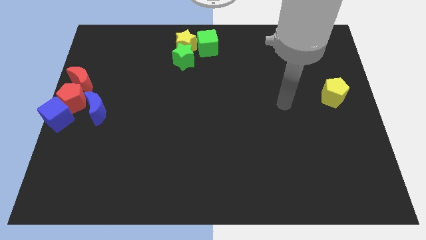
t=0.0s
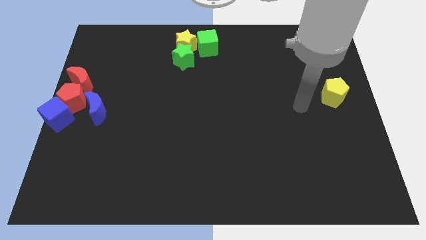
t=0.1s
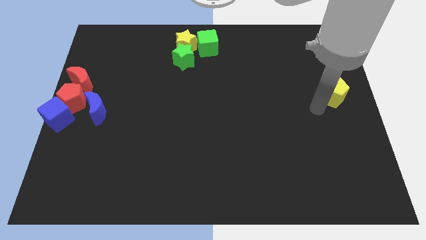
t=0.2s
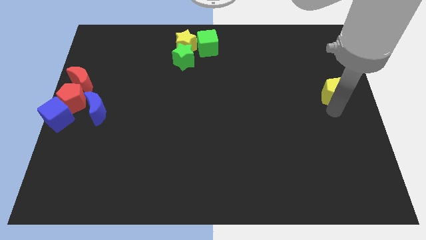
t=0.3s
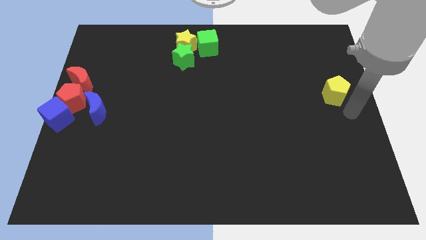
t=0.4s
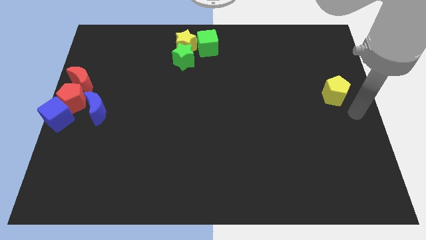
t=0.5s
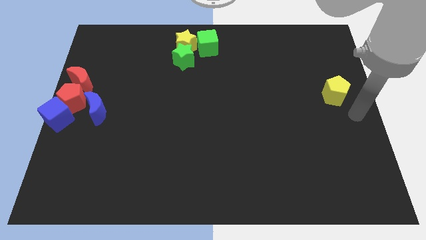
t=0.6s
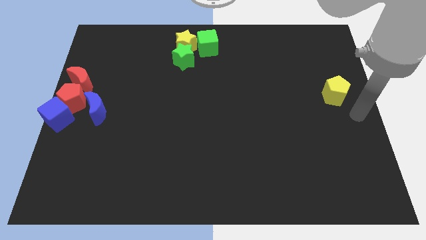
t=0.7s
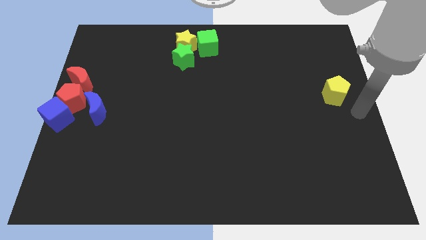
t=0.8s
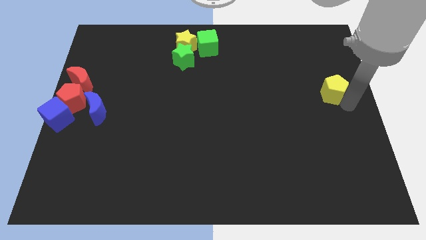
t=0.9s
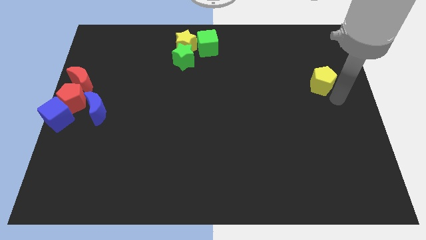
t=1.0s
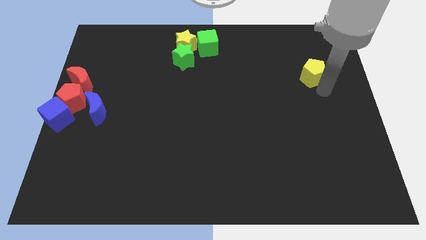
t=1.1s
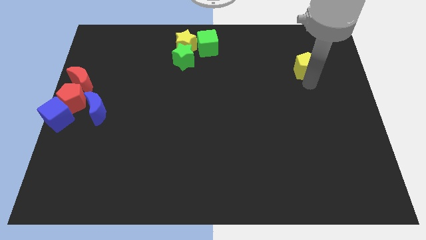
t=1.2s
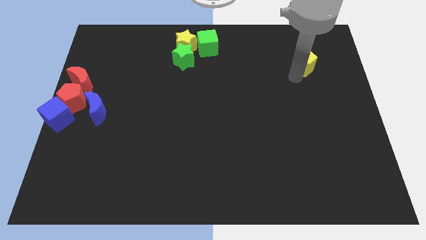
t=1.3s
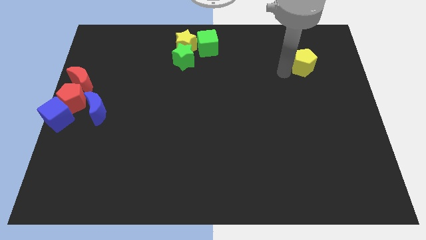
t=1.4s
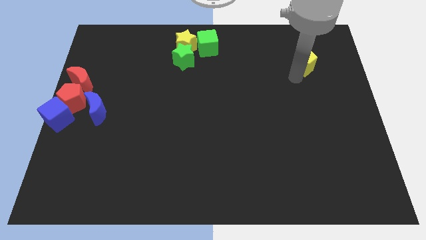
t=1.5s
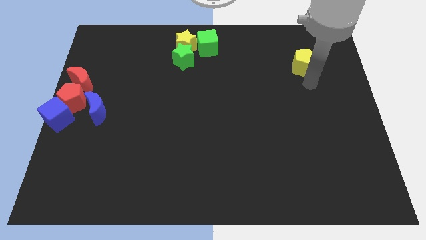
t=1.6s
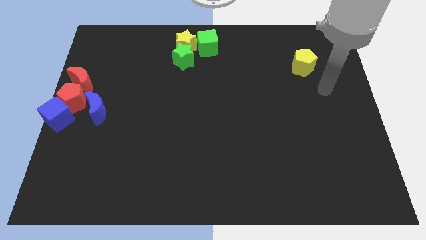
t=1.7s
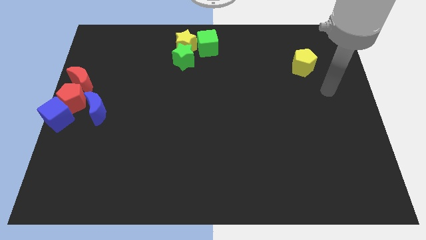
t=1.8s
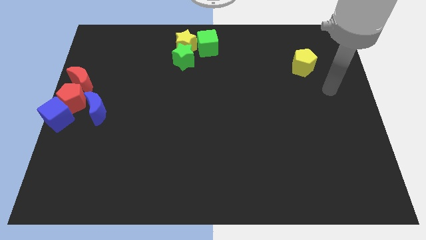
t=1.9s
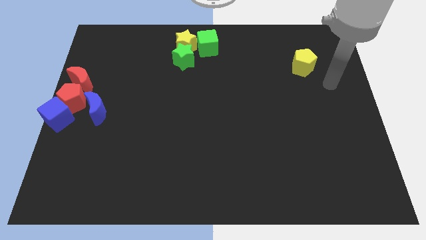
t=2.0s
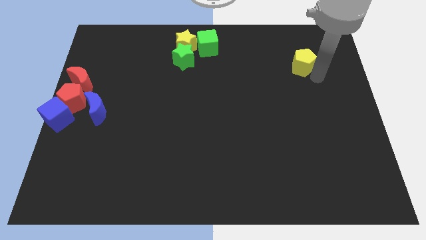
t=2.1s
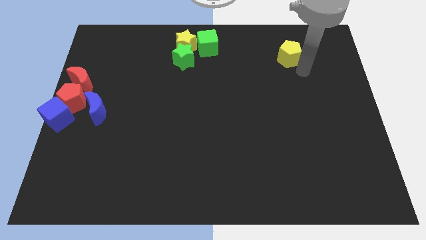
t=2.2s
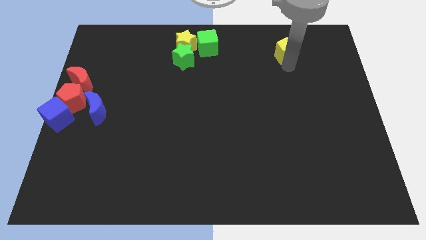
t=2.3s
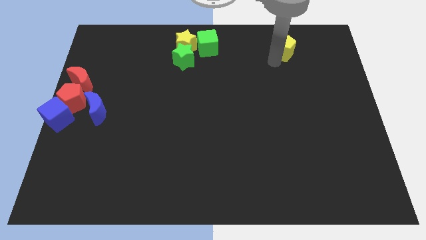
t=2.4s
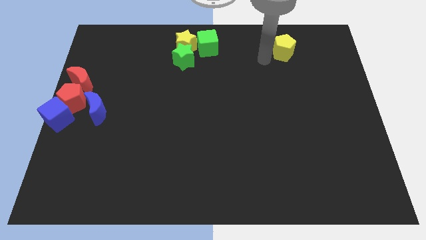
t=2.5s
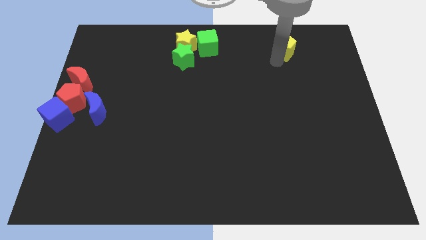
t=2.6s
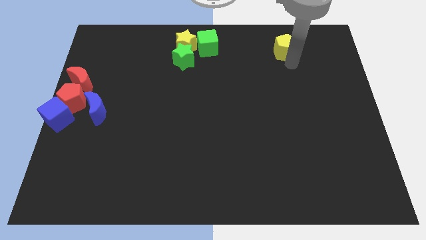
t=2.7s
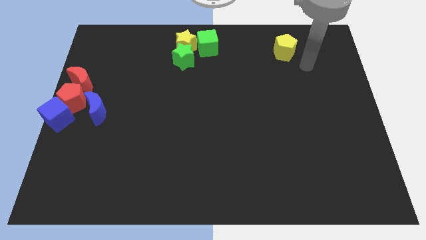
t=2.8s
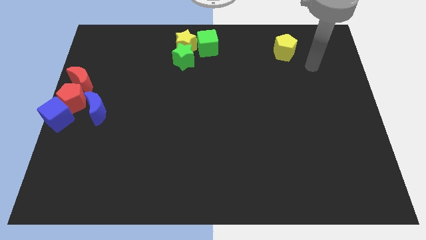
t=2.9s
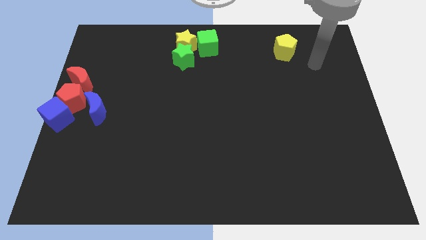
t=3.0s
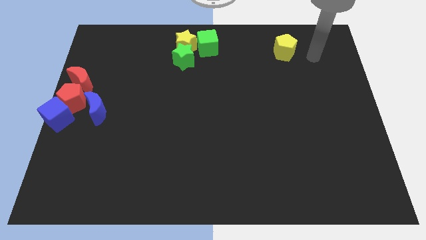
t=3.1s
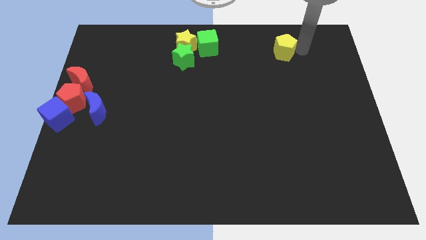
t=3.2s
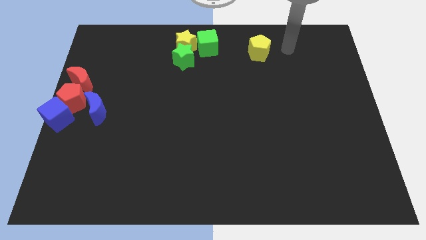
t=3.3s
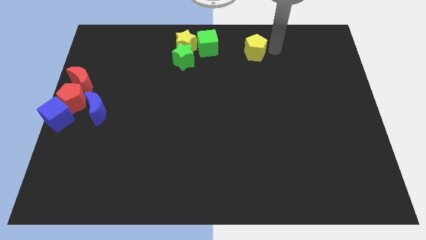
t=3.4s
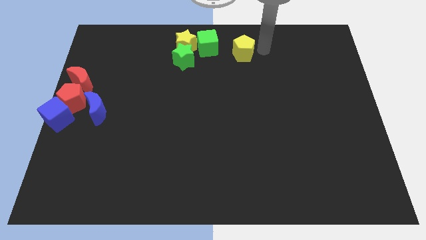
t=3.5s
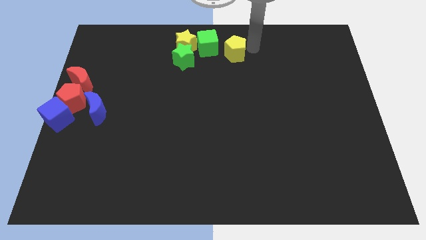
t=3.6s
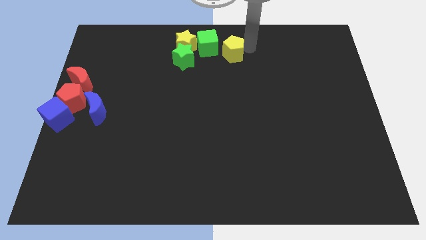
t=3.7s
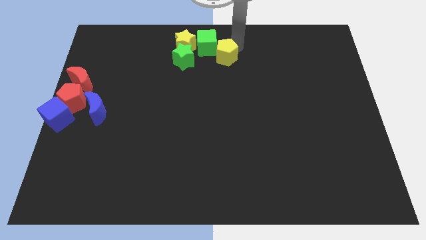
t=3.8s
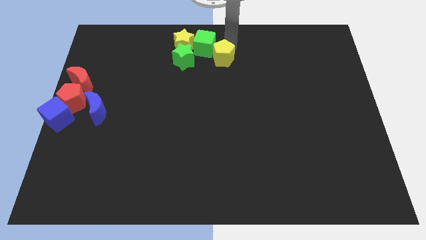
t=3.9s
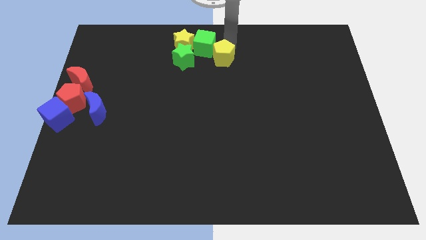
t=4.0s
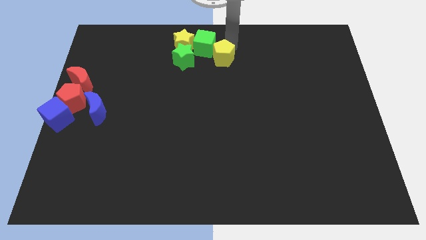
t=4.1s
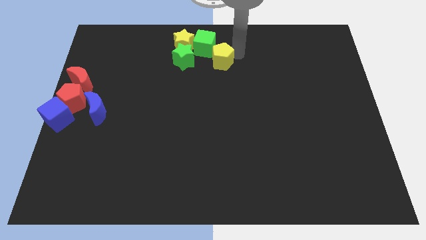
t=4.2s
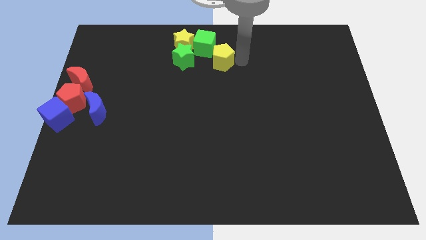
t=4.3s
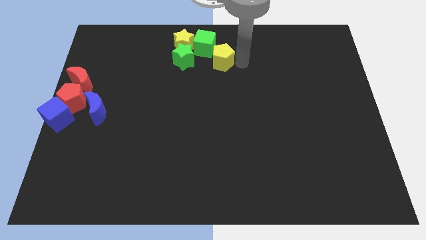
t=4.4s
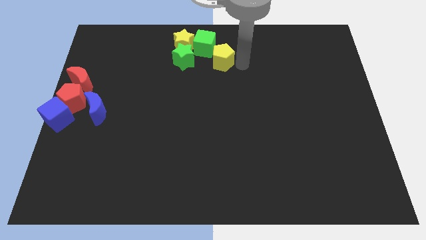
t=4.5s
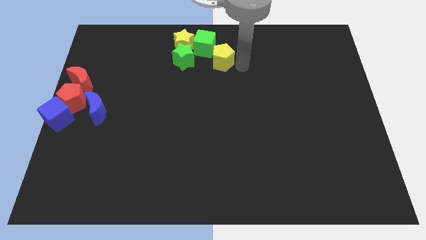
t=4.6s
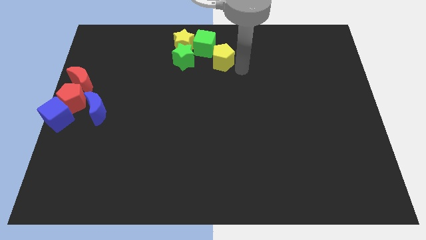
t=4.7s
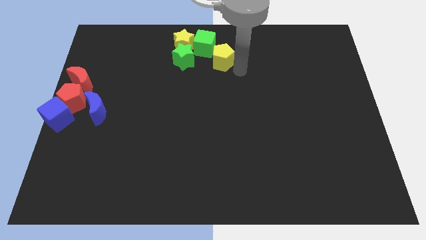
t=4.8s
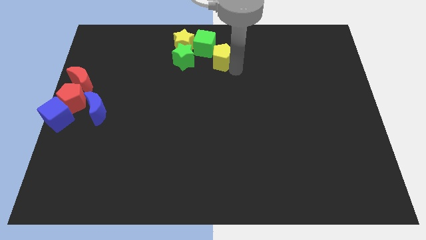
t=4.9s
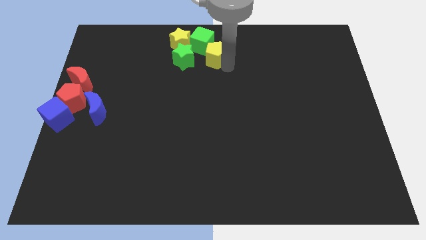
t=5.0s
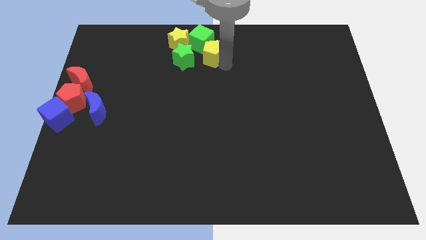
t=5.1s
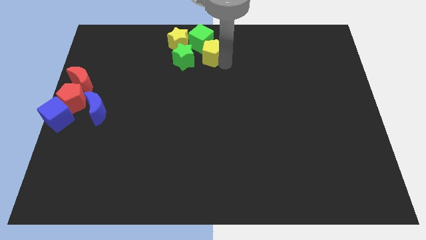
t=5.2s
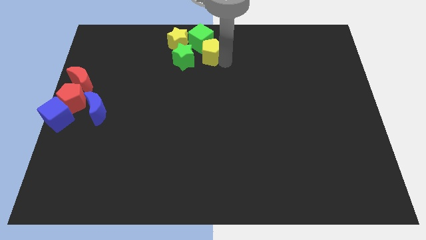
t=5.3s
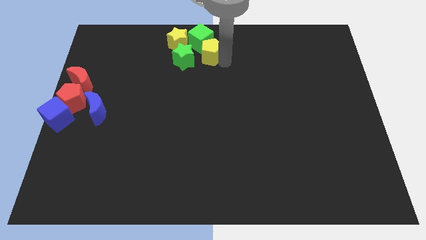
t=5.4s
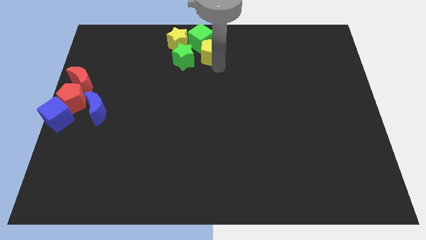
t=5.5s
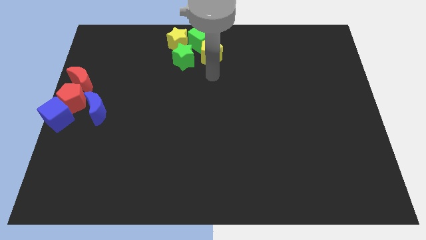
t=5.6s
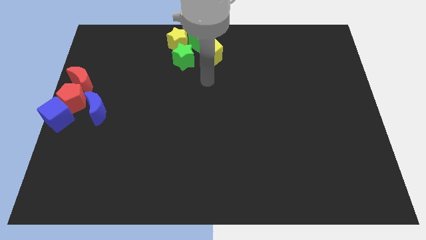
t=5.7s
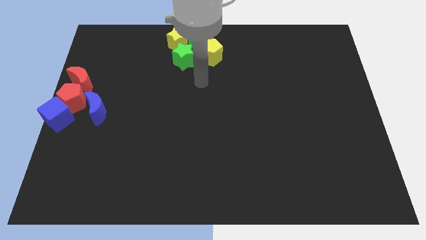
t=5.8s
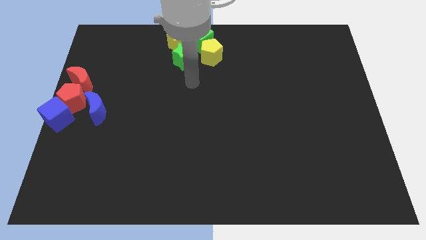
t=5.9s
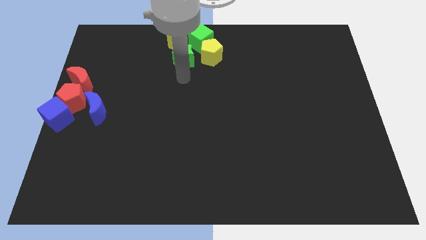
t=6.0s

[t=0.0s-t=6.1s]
slide yellow pentagon close to green cube

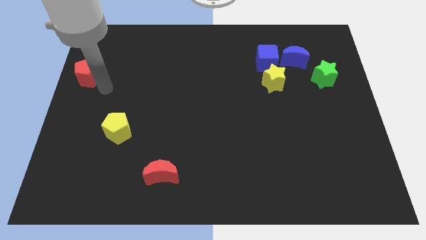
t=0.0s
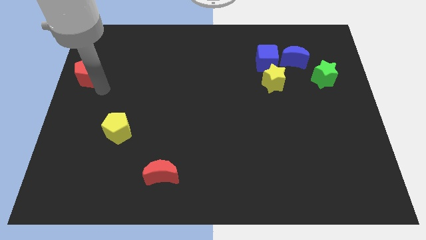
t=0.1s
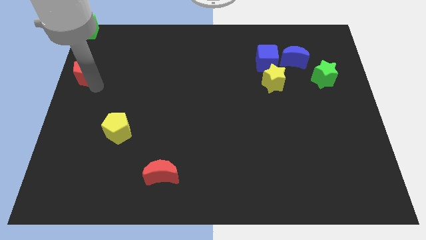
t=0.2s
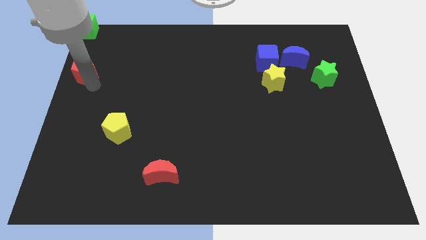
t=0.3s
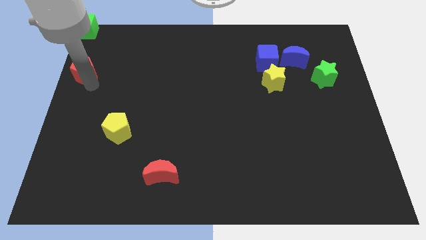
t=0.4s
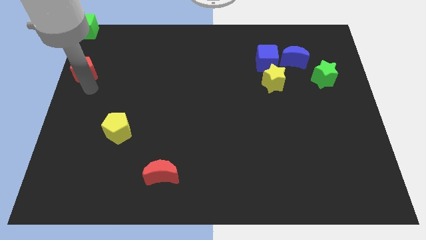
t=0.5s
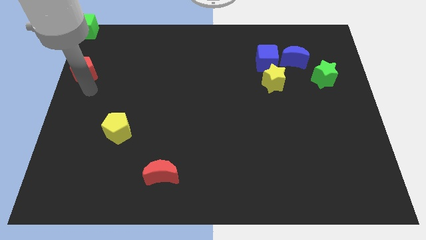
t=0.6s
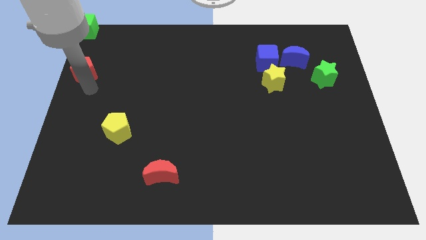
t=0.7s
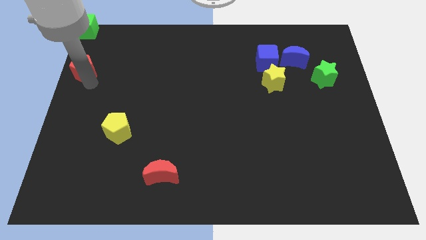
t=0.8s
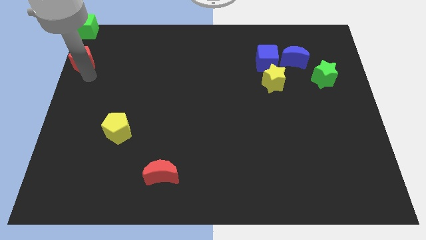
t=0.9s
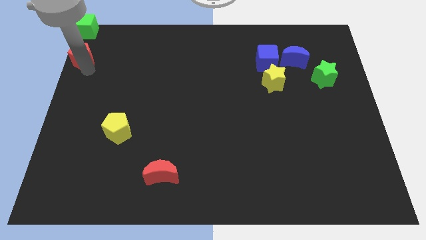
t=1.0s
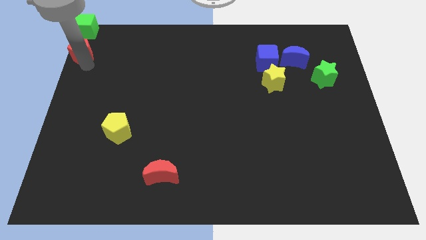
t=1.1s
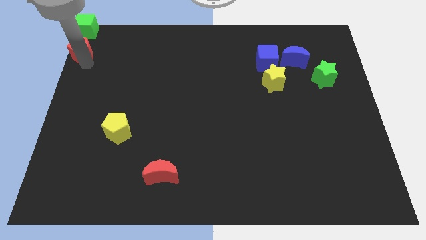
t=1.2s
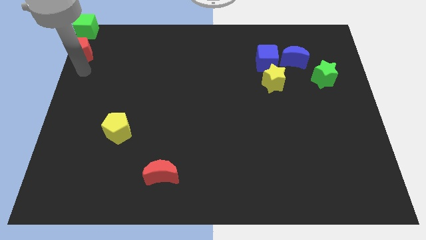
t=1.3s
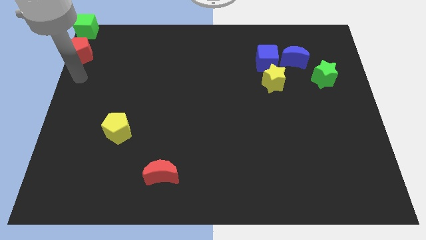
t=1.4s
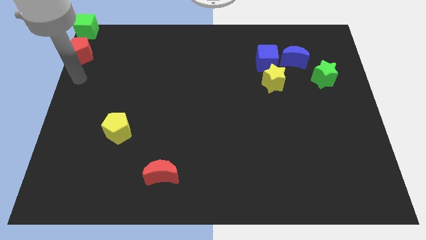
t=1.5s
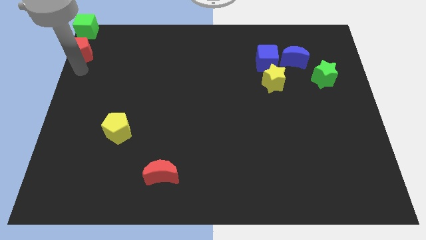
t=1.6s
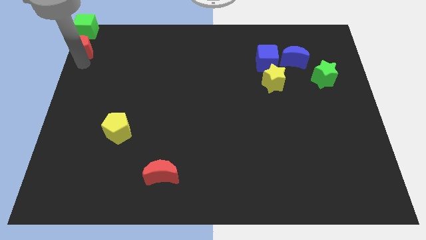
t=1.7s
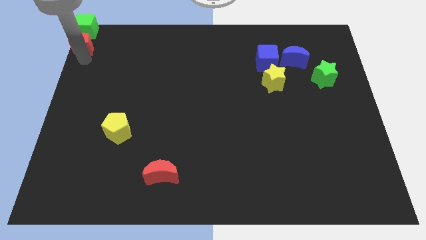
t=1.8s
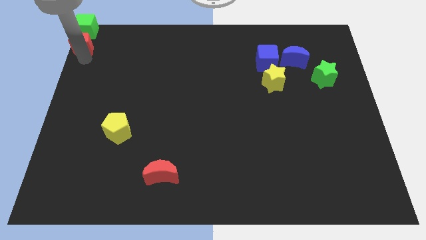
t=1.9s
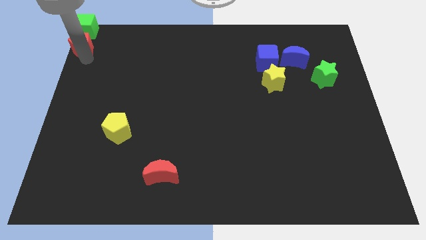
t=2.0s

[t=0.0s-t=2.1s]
move red pentagon below the green cube

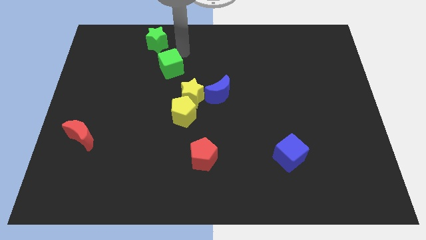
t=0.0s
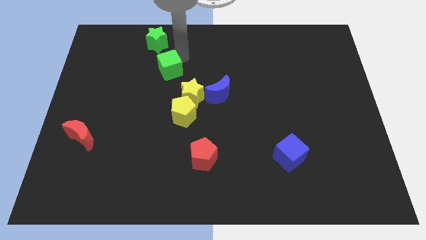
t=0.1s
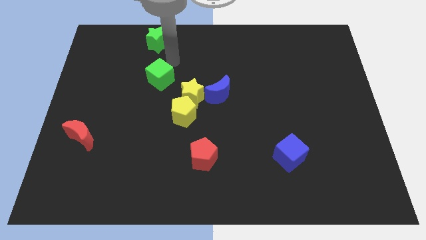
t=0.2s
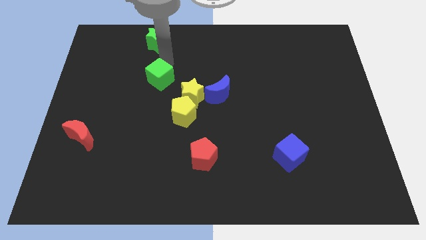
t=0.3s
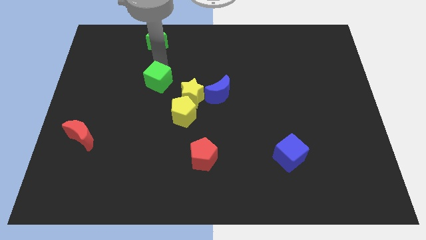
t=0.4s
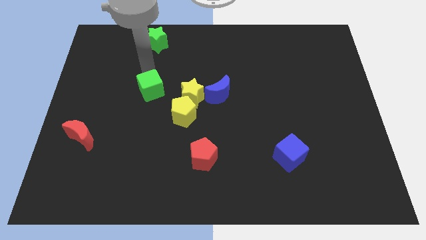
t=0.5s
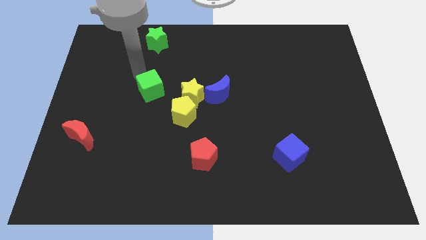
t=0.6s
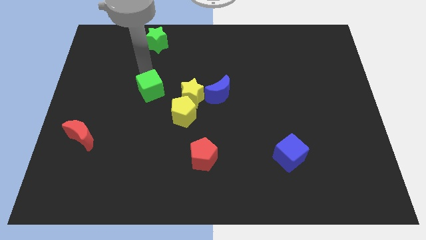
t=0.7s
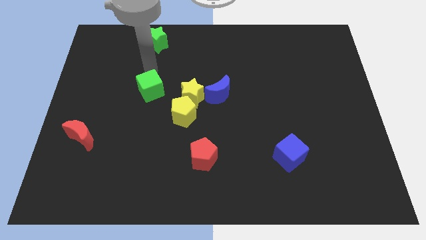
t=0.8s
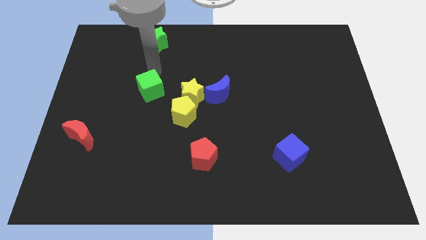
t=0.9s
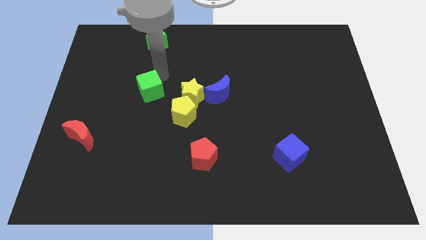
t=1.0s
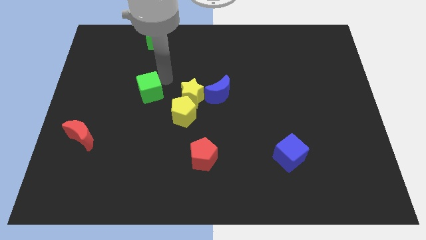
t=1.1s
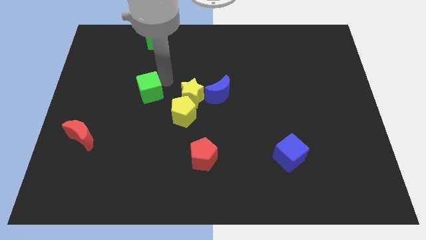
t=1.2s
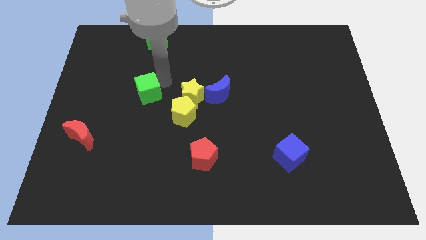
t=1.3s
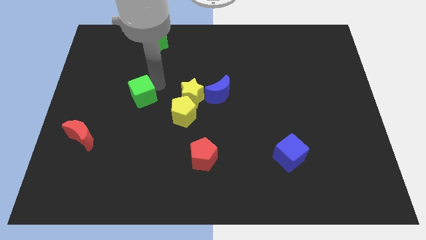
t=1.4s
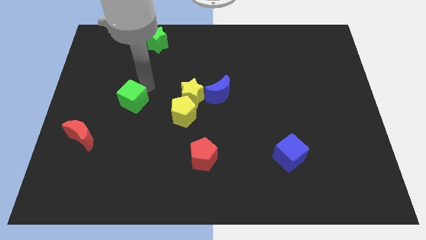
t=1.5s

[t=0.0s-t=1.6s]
move the green cube to the left of the yellow star
